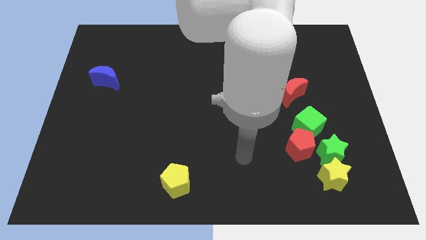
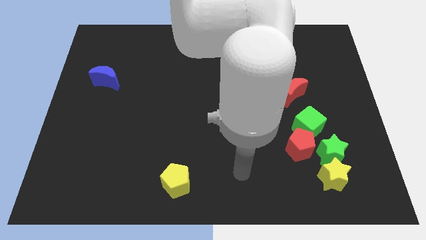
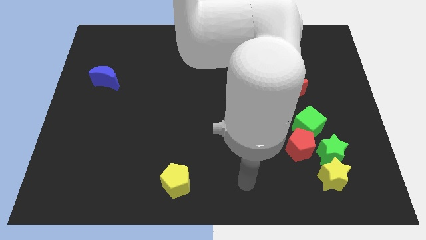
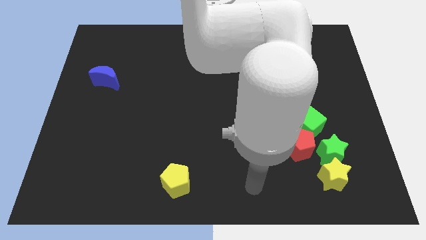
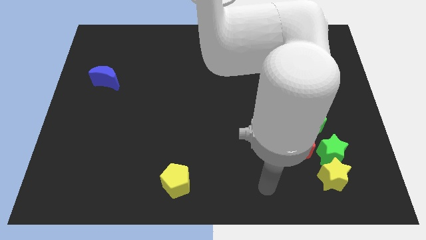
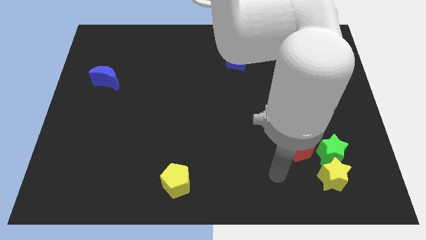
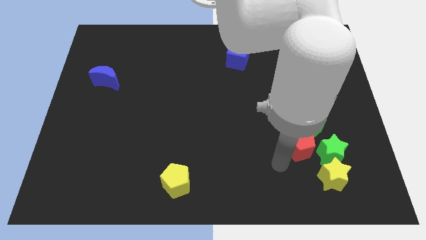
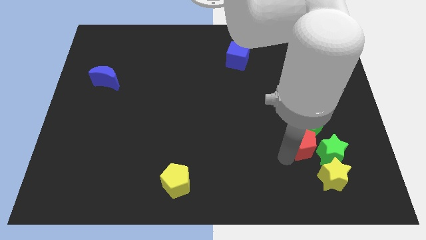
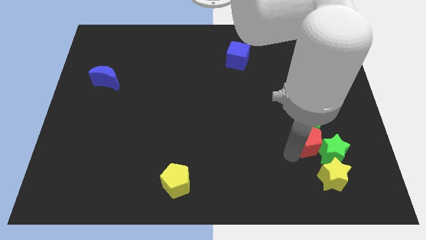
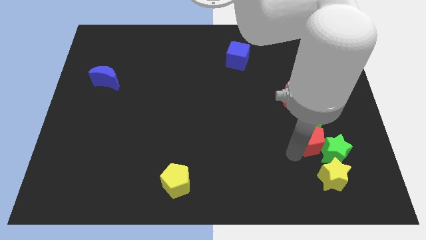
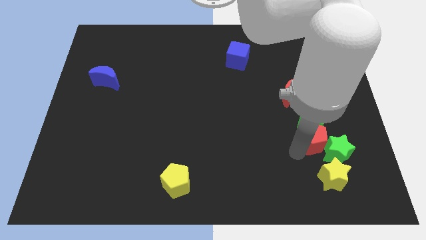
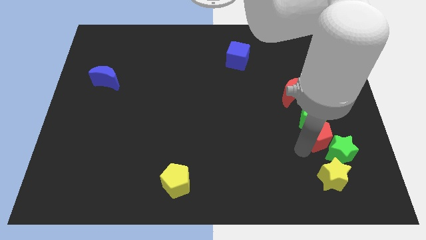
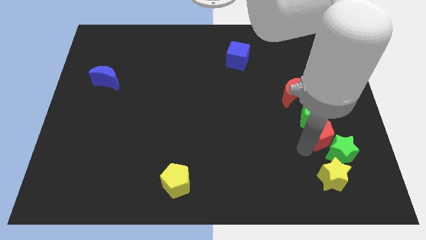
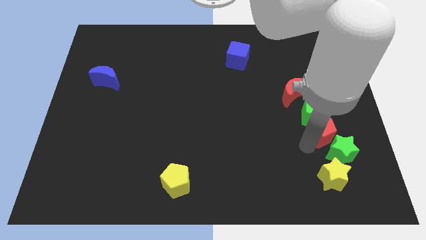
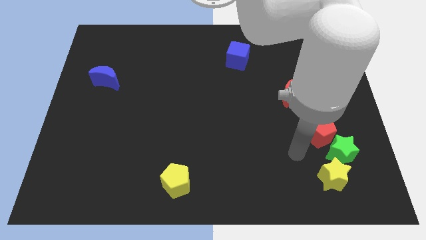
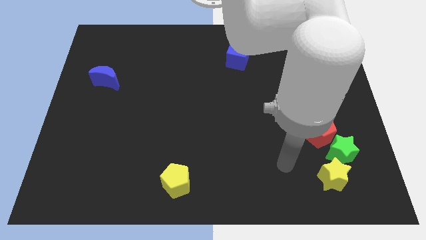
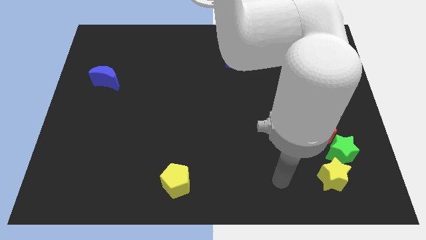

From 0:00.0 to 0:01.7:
push green cube with red pentagon

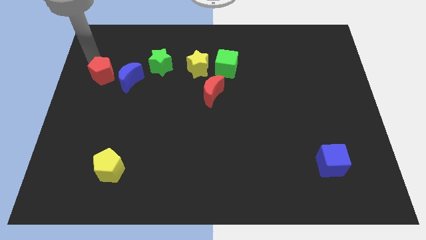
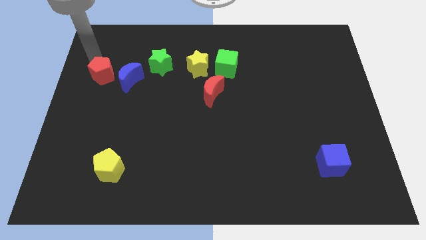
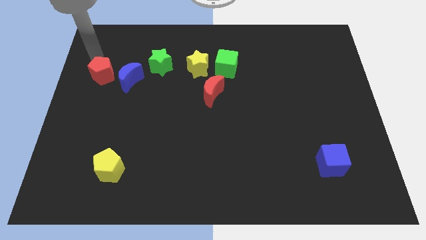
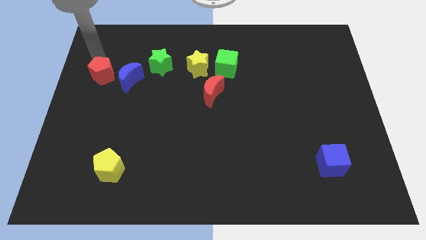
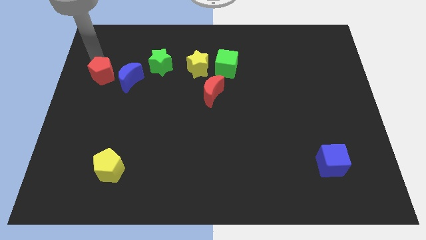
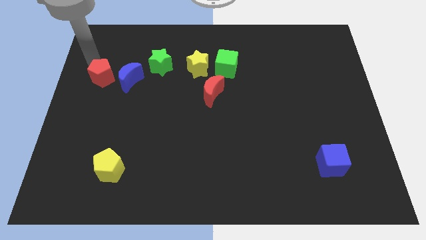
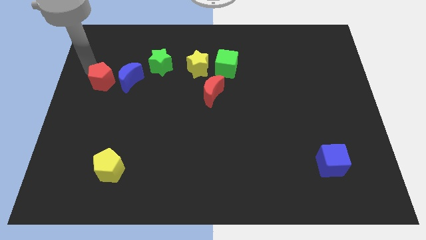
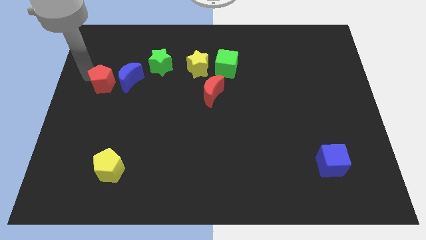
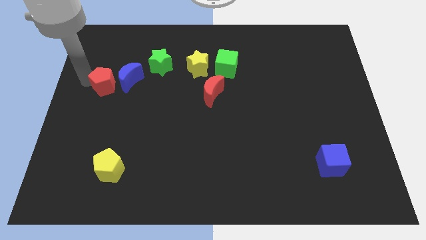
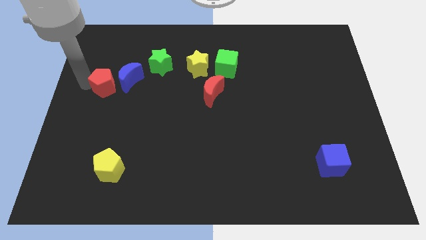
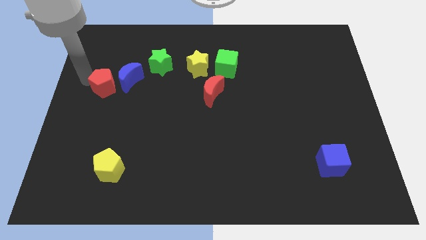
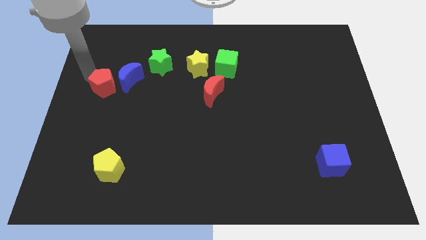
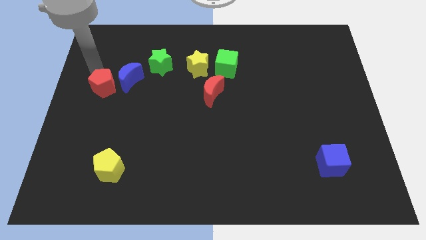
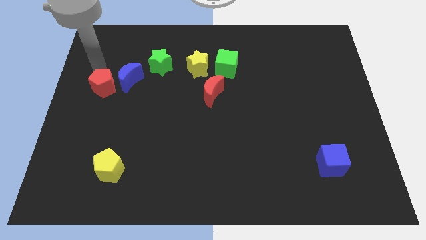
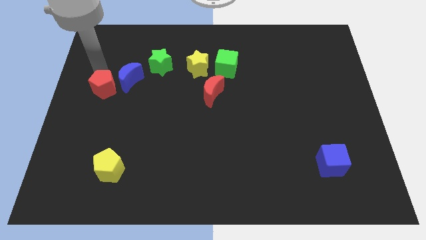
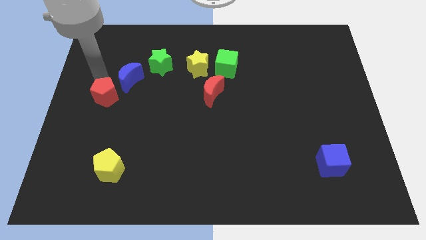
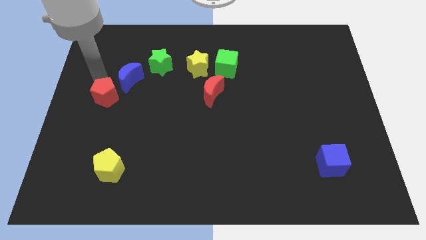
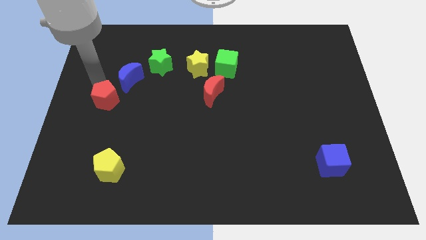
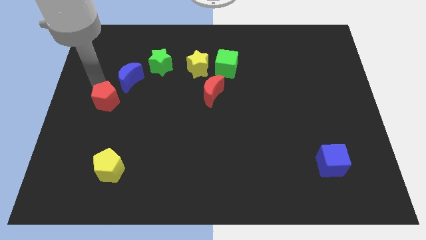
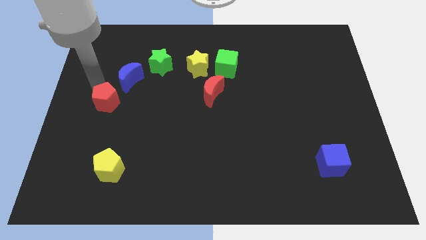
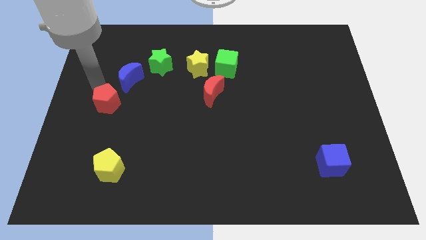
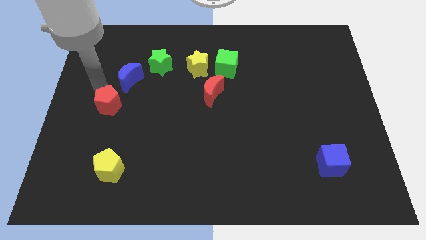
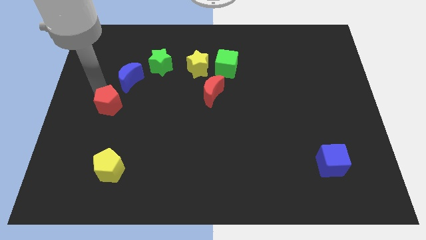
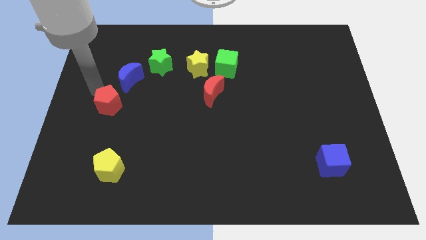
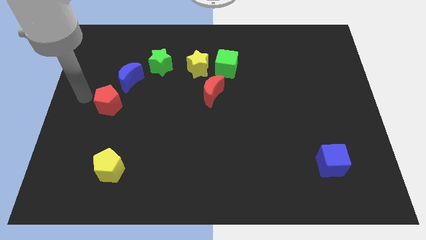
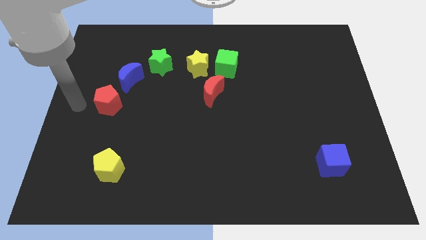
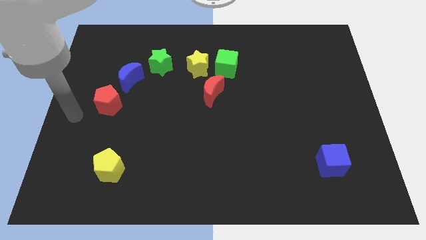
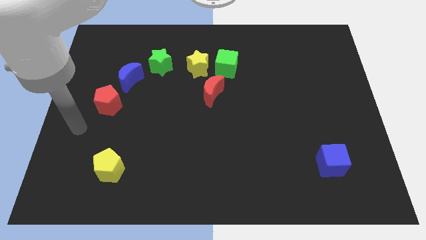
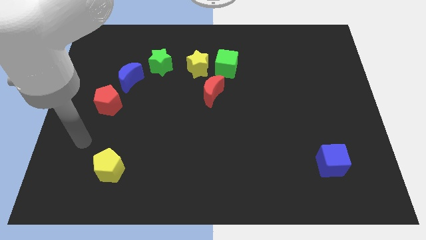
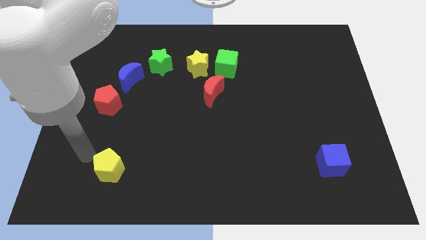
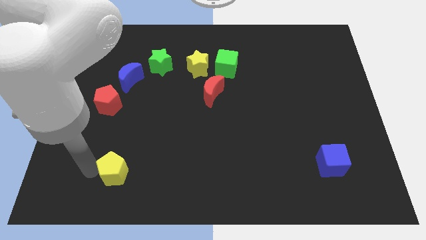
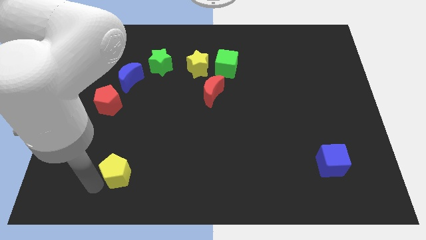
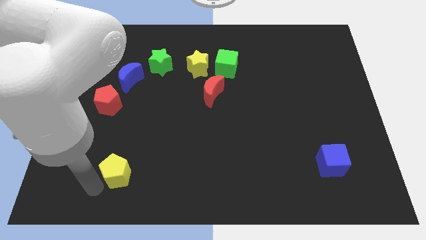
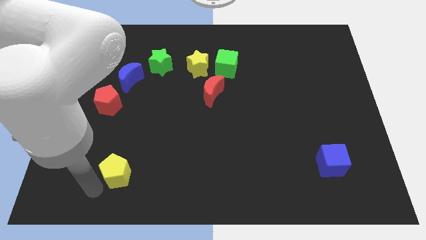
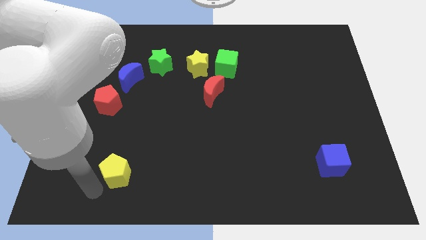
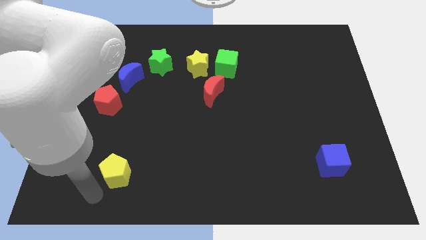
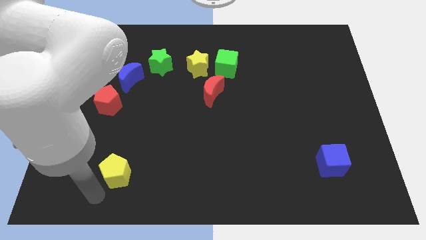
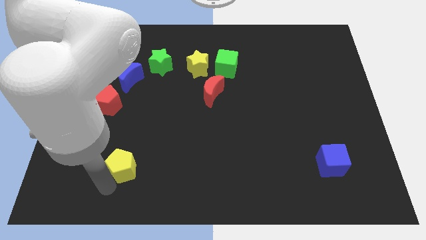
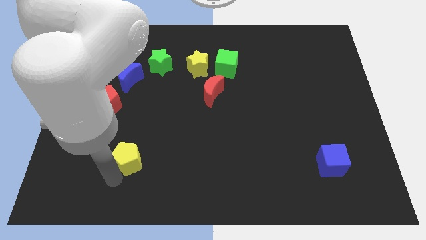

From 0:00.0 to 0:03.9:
place the red pentagon towards the bottom left side of the blue crescent

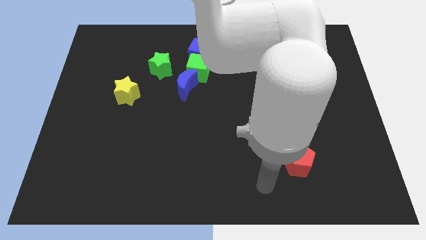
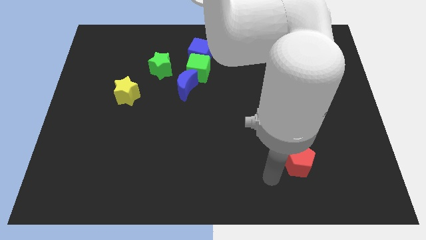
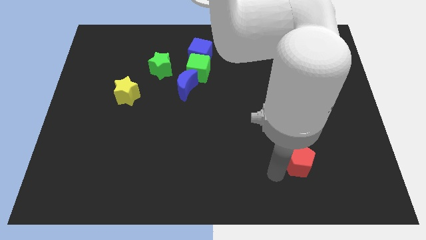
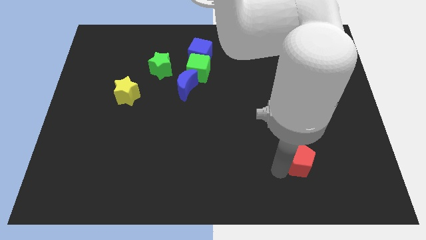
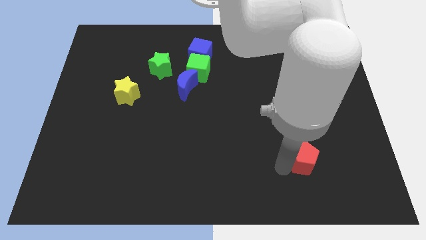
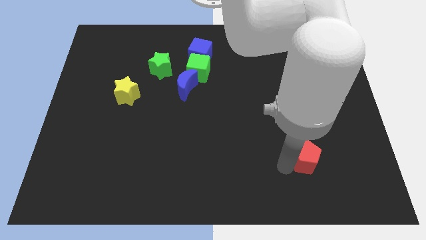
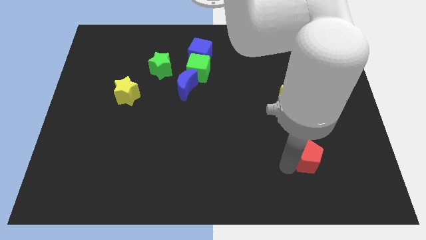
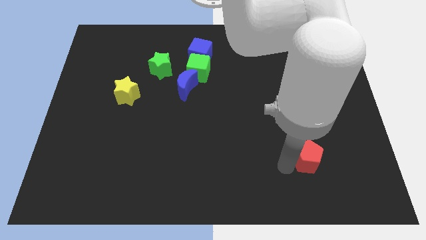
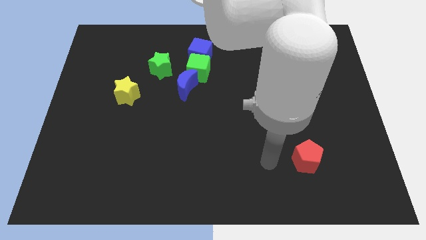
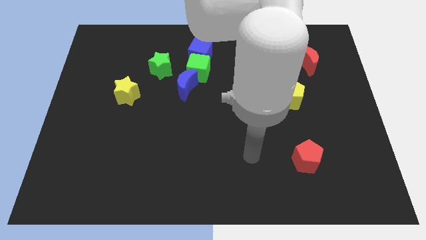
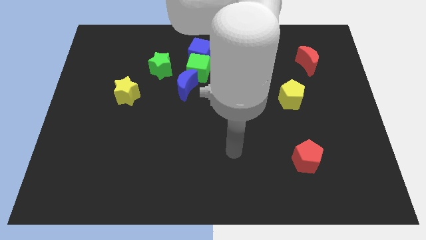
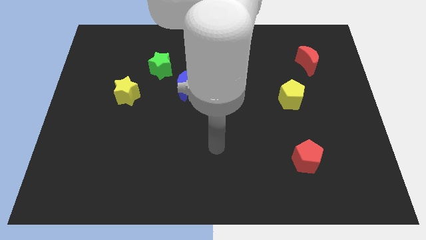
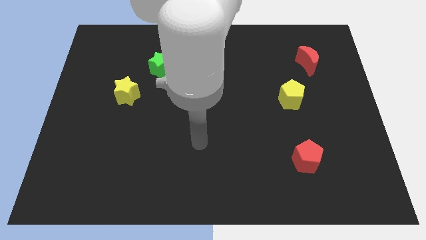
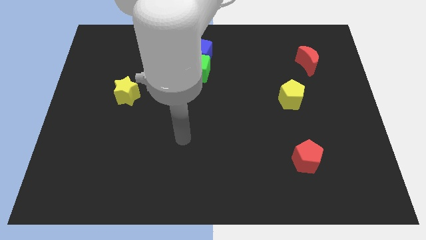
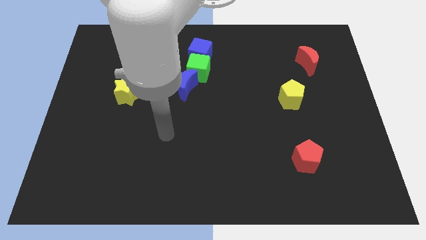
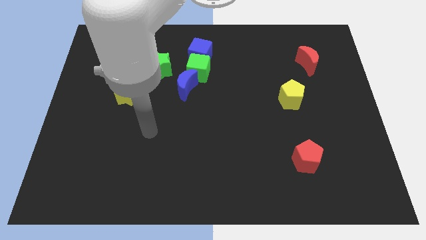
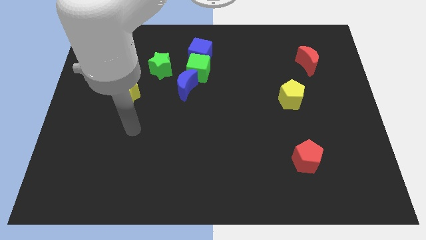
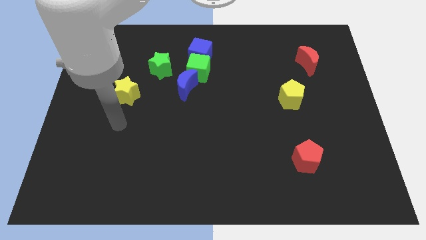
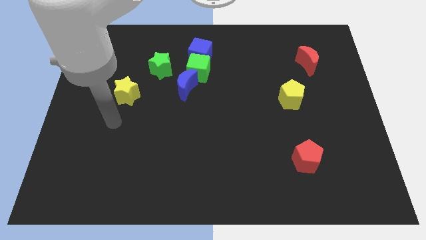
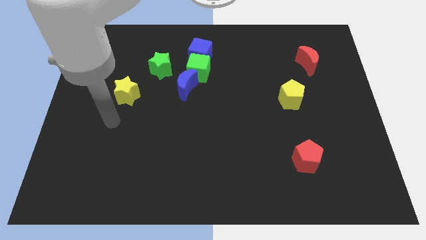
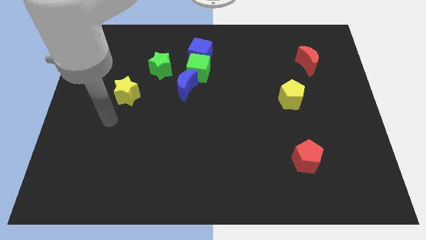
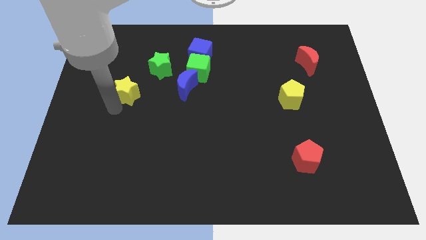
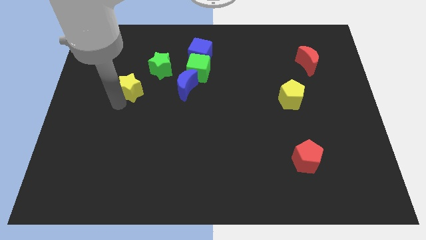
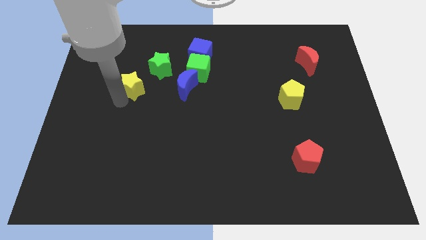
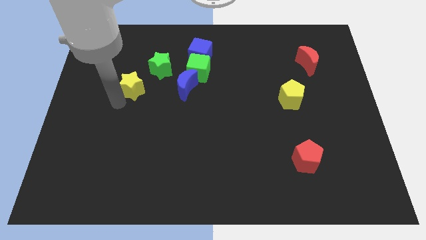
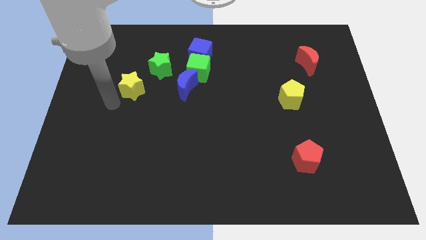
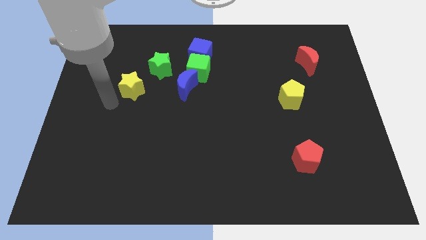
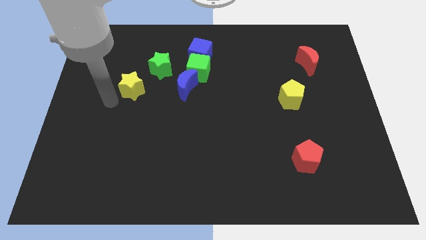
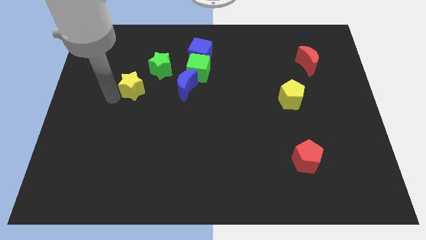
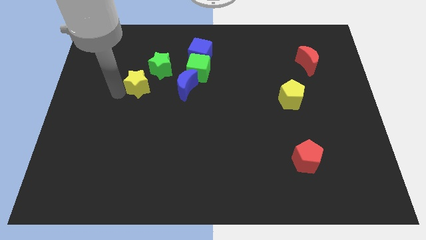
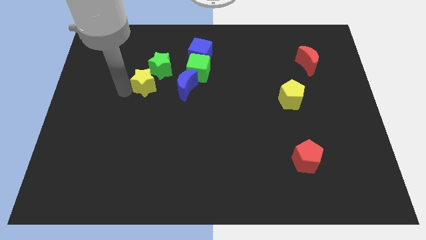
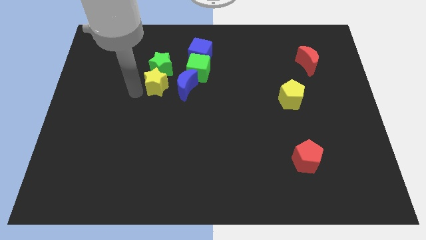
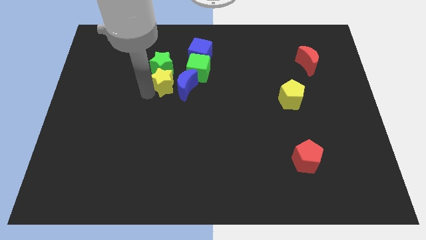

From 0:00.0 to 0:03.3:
push the yellow star down to the green star

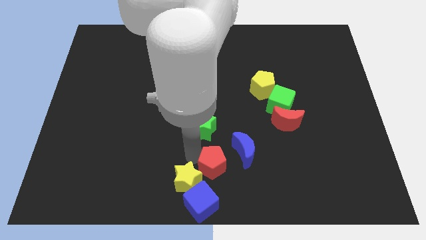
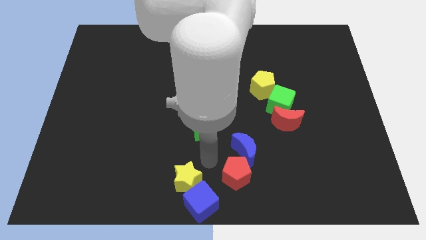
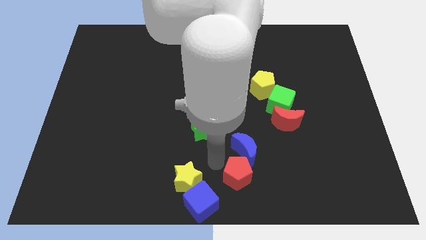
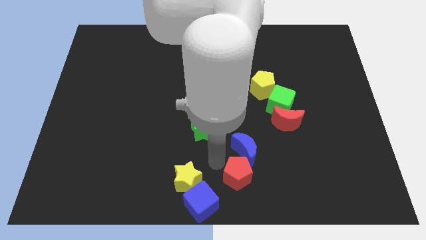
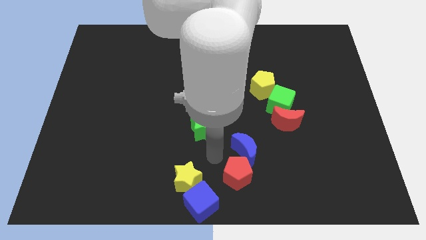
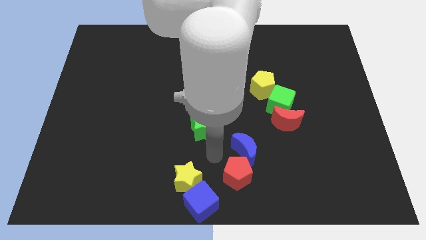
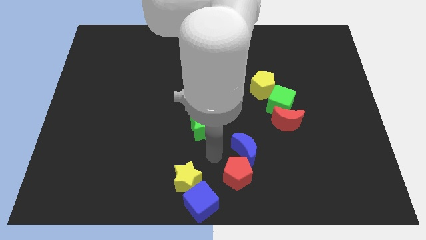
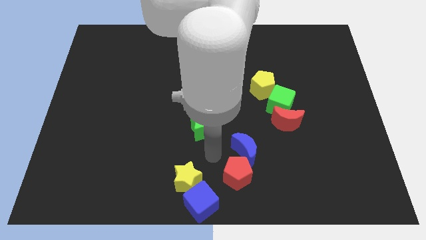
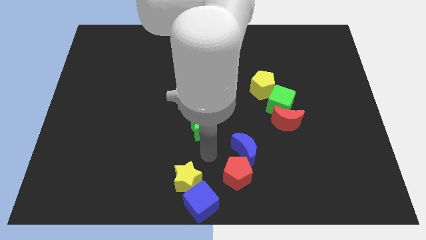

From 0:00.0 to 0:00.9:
place red pentagon at bottom of blue moon
